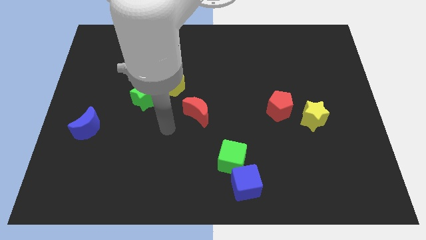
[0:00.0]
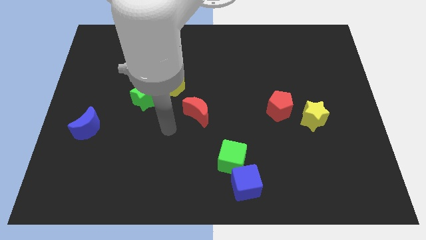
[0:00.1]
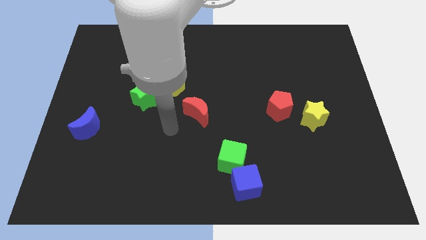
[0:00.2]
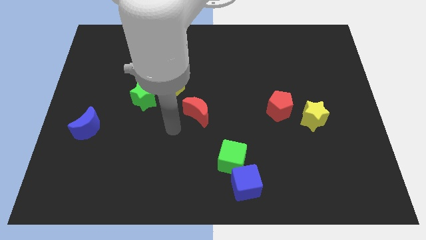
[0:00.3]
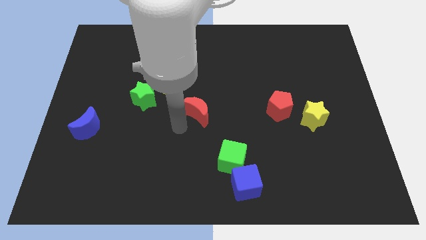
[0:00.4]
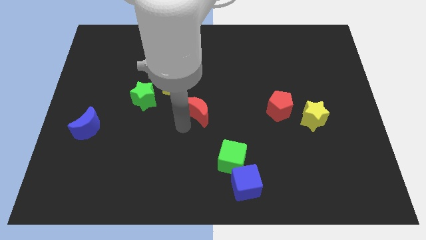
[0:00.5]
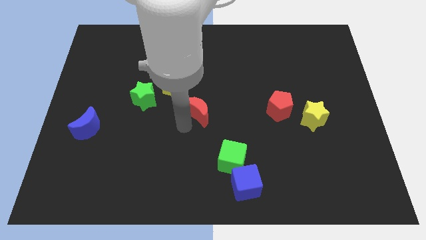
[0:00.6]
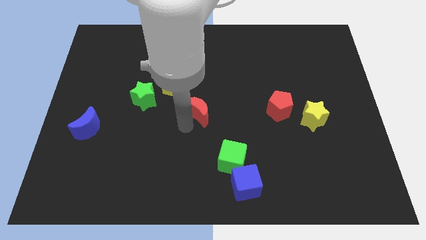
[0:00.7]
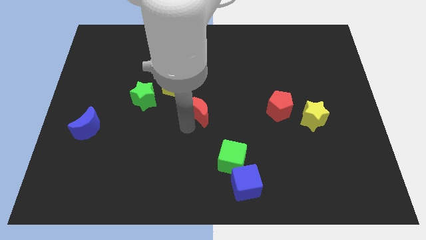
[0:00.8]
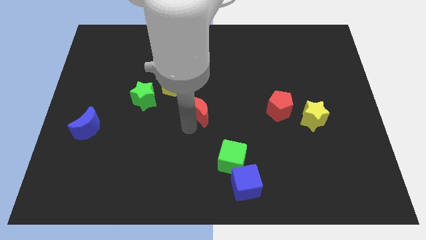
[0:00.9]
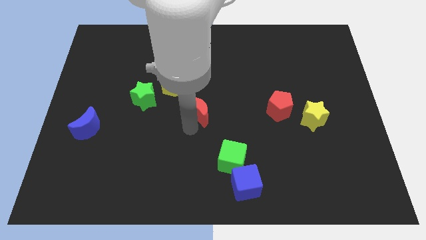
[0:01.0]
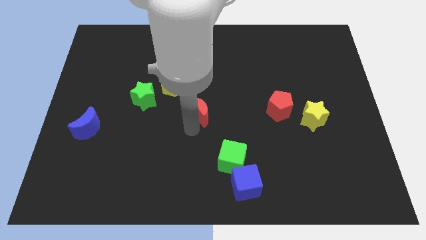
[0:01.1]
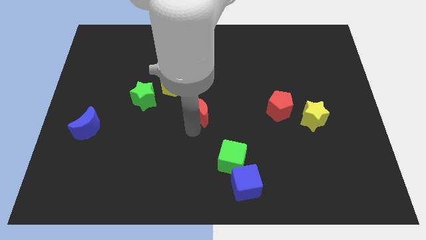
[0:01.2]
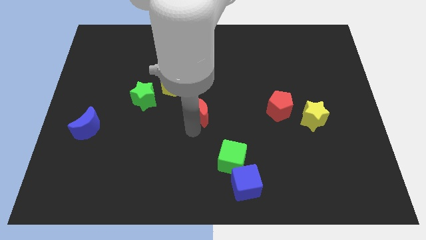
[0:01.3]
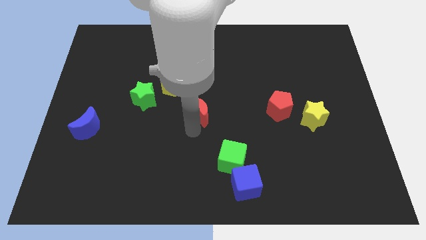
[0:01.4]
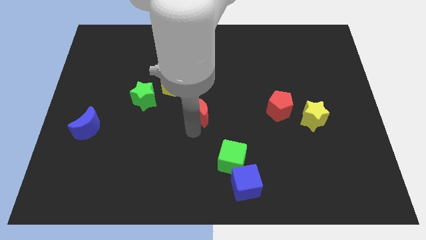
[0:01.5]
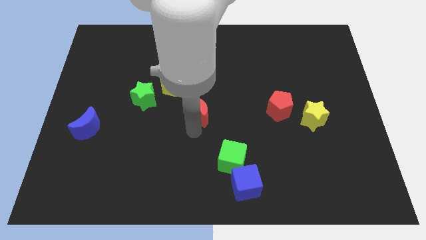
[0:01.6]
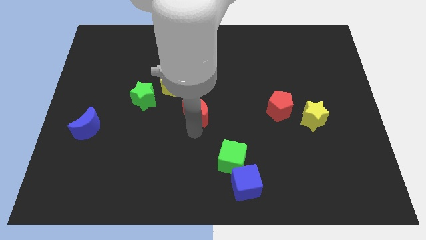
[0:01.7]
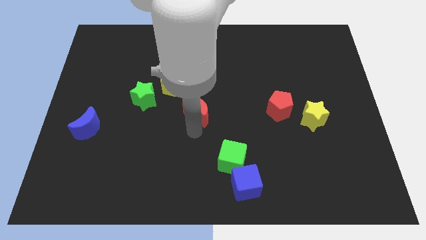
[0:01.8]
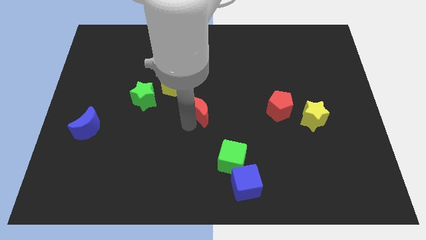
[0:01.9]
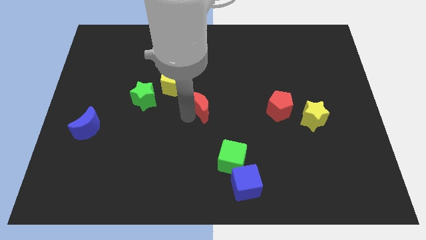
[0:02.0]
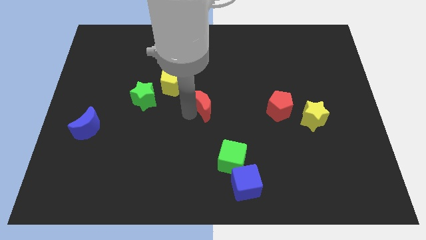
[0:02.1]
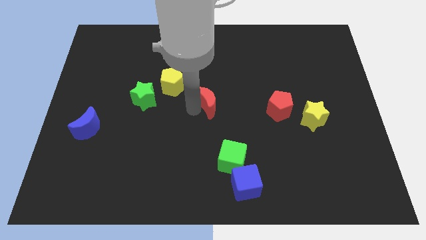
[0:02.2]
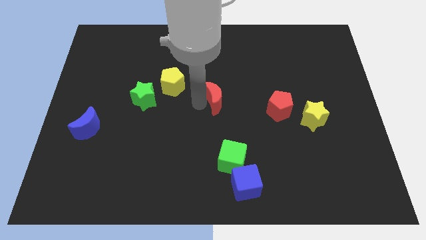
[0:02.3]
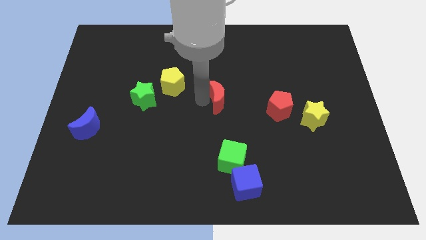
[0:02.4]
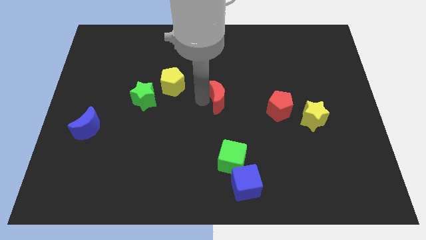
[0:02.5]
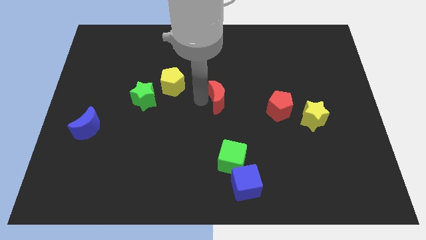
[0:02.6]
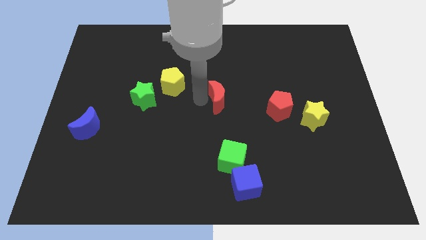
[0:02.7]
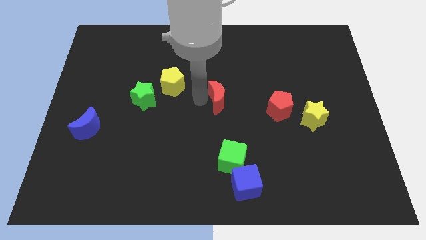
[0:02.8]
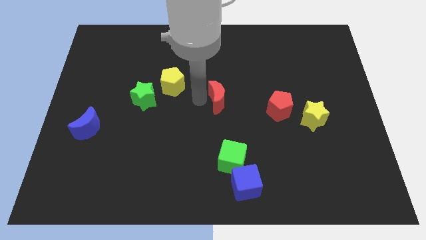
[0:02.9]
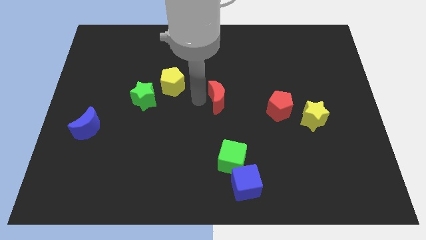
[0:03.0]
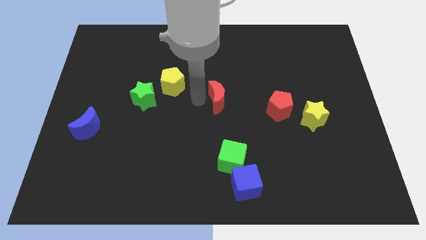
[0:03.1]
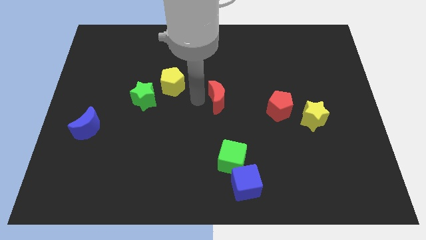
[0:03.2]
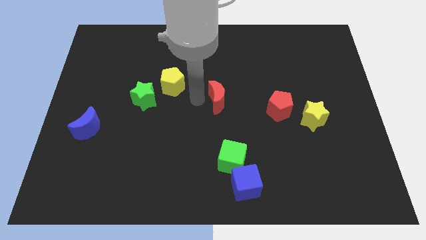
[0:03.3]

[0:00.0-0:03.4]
slightly push the red crescent towards the center of the board

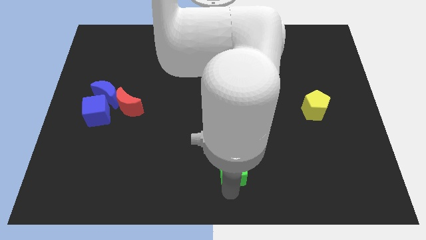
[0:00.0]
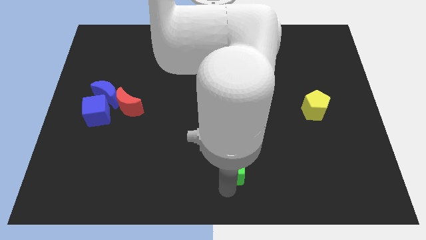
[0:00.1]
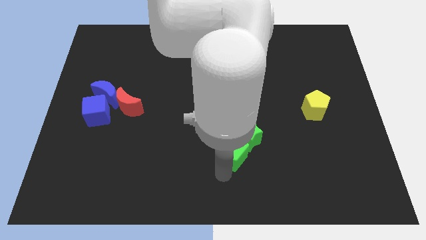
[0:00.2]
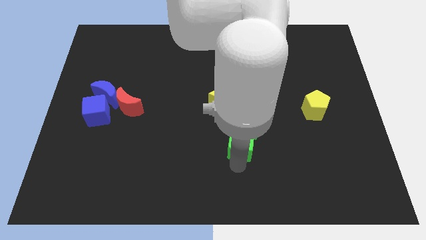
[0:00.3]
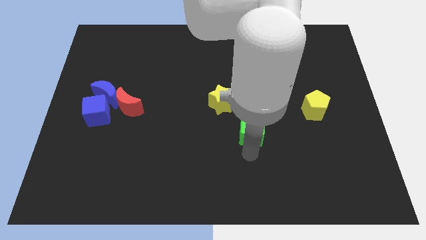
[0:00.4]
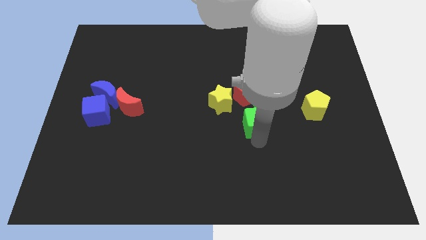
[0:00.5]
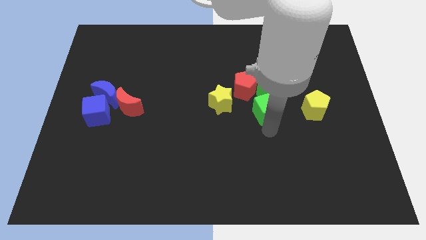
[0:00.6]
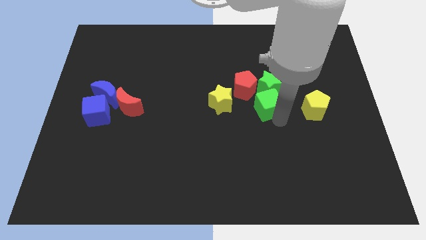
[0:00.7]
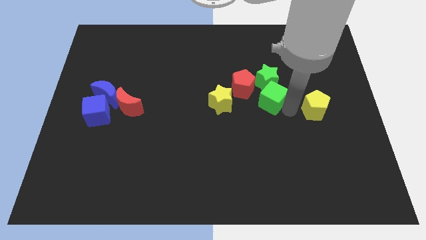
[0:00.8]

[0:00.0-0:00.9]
push the green star and the green cube towards the center of the board

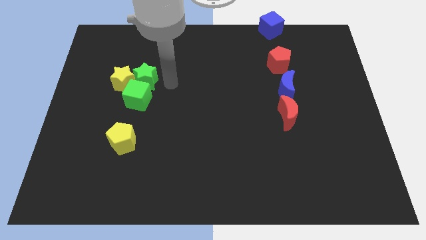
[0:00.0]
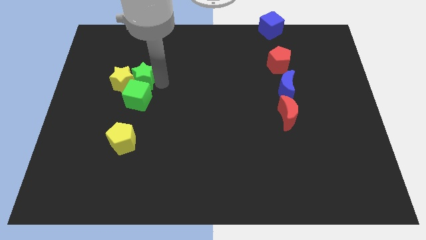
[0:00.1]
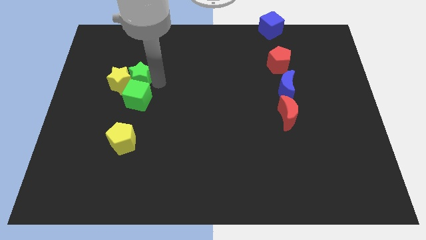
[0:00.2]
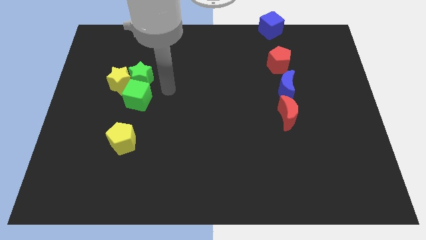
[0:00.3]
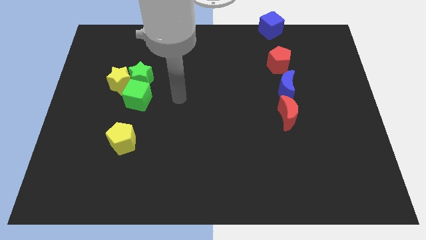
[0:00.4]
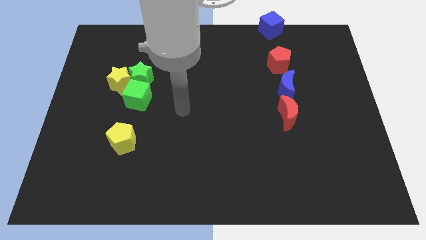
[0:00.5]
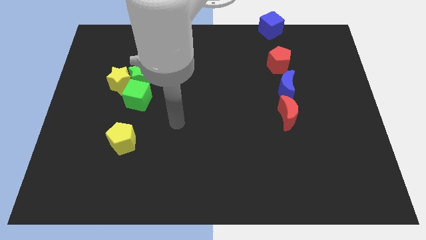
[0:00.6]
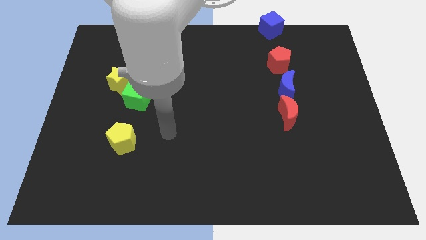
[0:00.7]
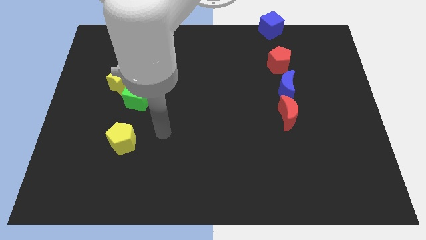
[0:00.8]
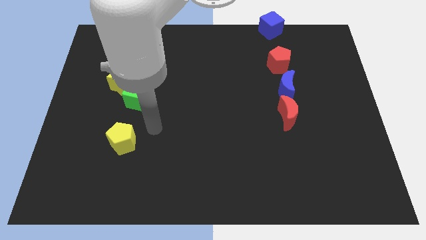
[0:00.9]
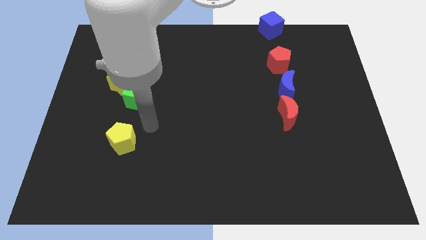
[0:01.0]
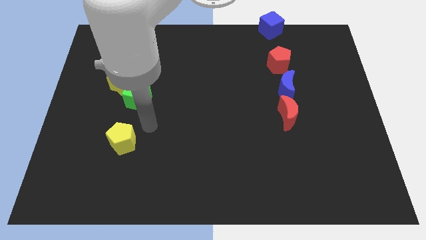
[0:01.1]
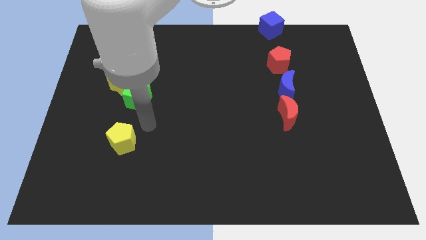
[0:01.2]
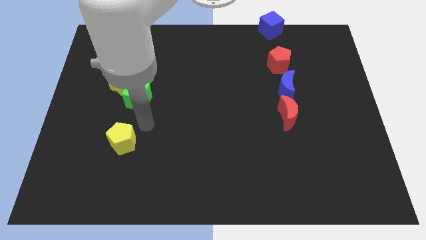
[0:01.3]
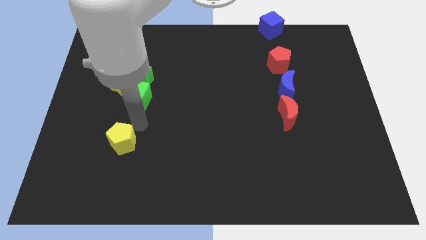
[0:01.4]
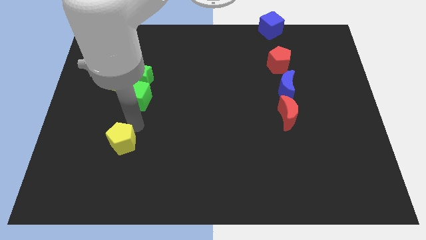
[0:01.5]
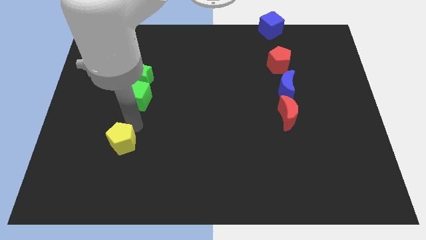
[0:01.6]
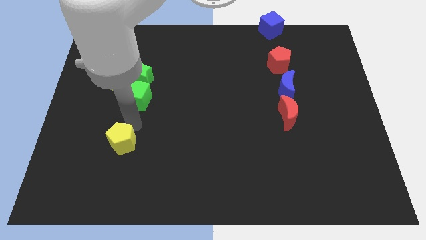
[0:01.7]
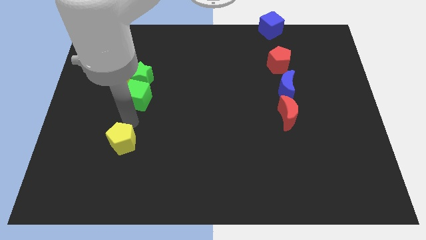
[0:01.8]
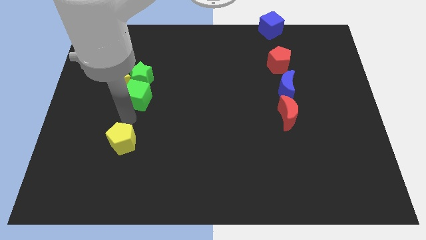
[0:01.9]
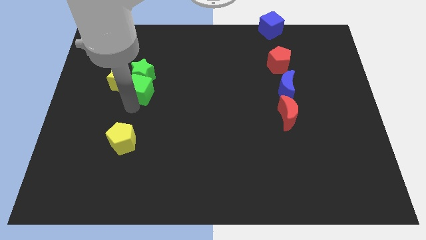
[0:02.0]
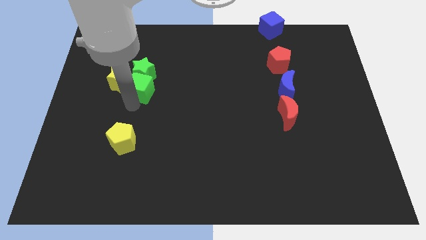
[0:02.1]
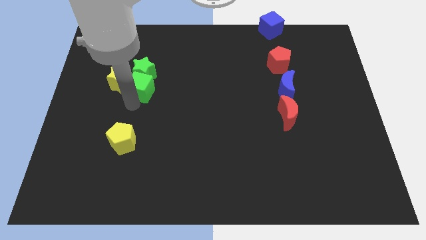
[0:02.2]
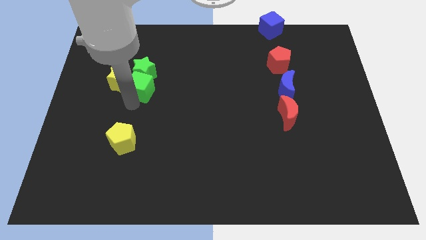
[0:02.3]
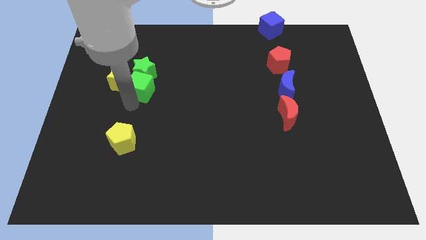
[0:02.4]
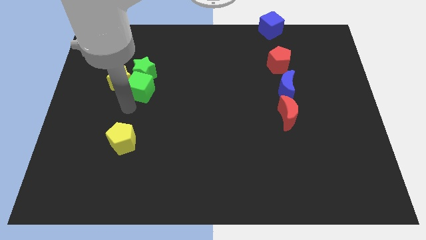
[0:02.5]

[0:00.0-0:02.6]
push green cubes in to yellow star

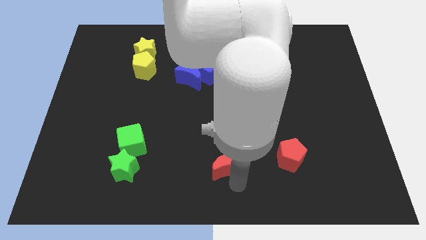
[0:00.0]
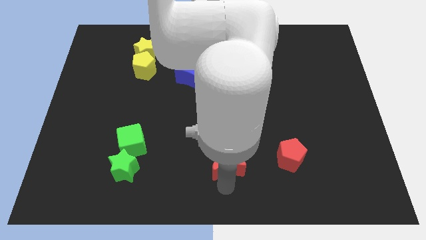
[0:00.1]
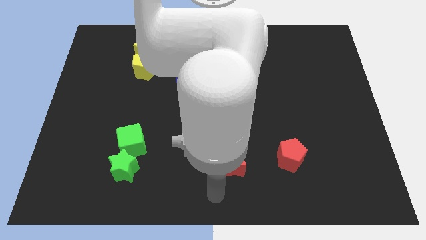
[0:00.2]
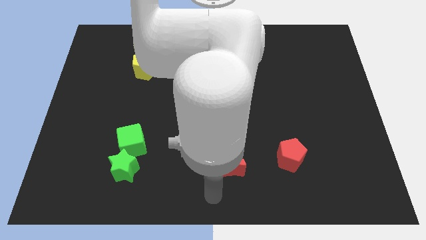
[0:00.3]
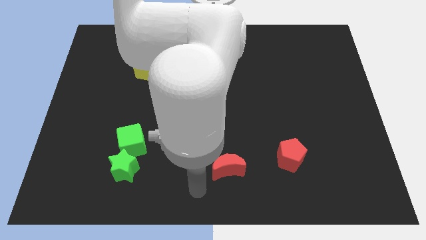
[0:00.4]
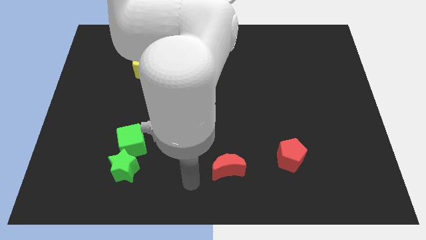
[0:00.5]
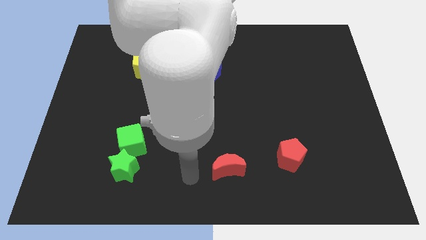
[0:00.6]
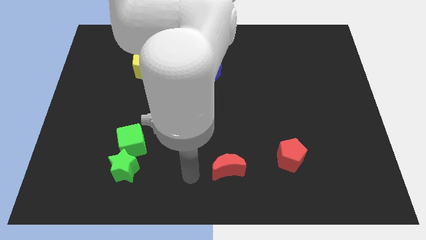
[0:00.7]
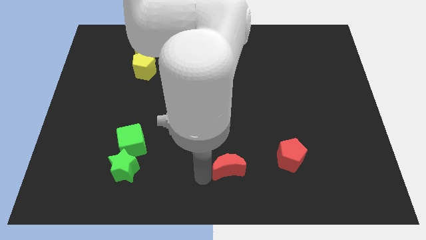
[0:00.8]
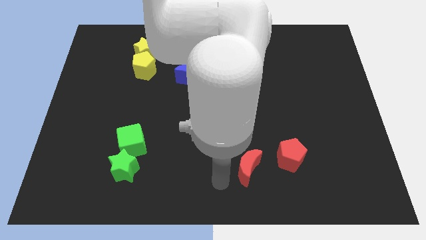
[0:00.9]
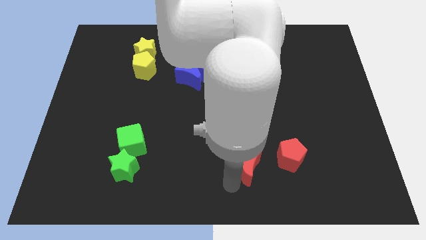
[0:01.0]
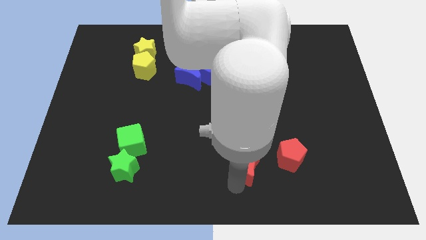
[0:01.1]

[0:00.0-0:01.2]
push the red moon towards the red pentagon

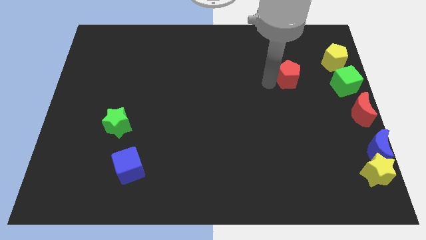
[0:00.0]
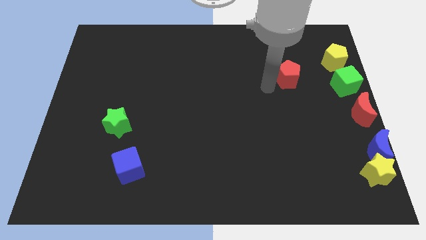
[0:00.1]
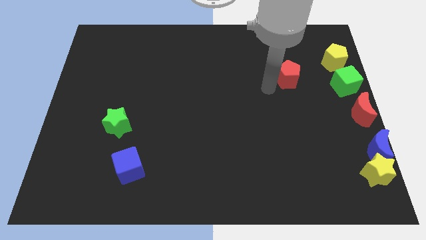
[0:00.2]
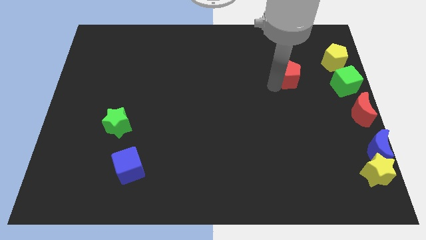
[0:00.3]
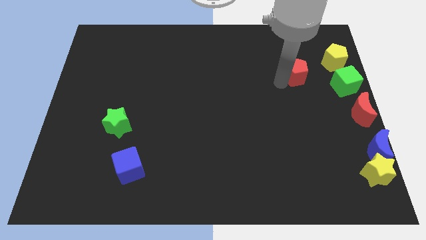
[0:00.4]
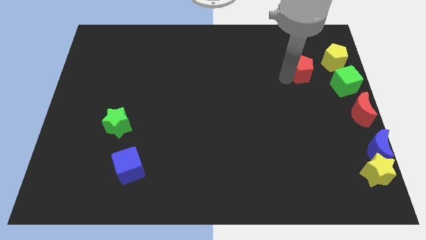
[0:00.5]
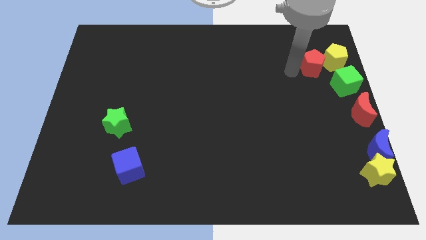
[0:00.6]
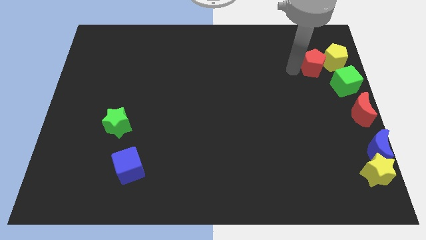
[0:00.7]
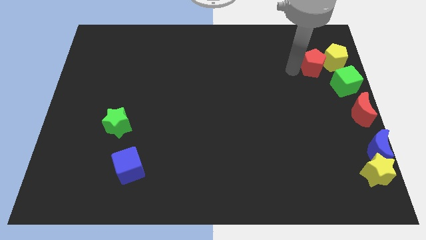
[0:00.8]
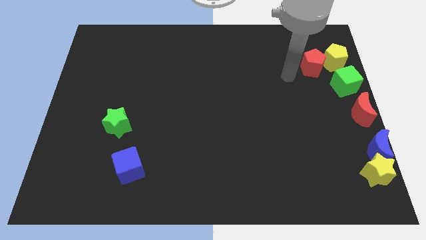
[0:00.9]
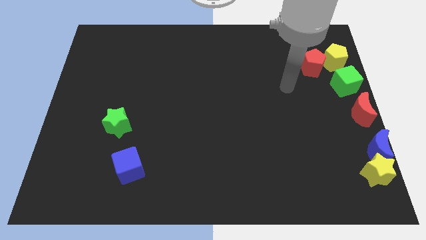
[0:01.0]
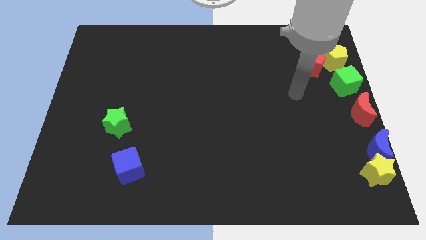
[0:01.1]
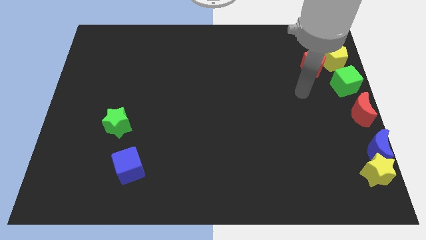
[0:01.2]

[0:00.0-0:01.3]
slide the red pentagon into the yellow pentagon
